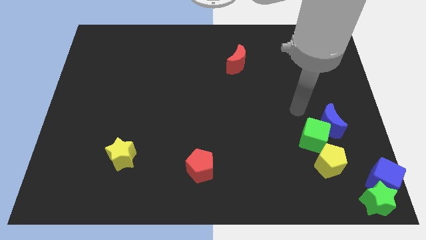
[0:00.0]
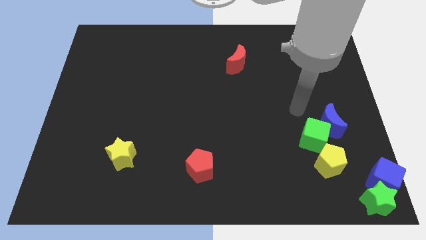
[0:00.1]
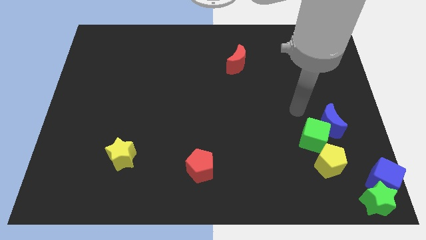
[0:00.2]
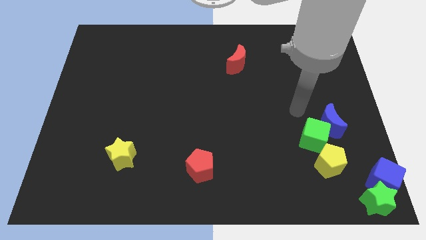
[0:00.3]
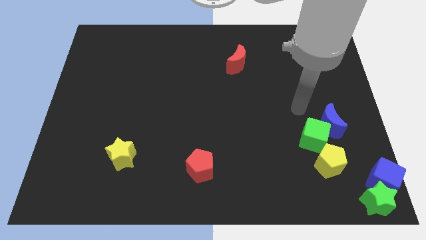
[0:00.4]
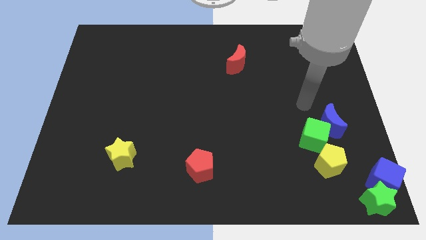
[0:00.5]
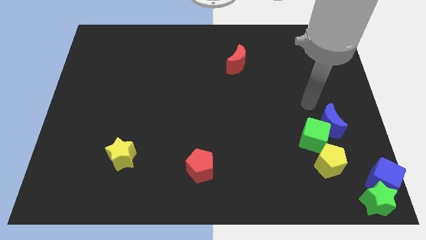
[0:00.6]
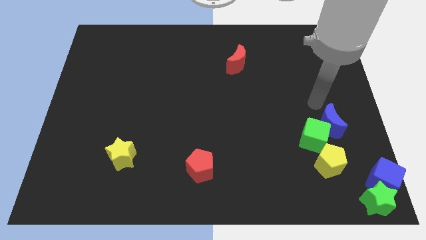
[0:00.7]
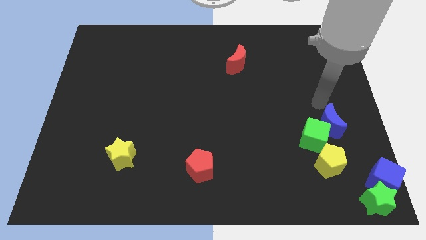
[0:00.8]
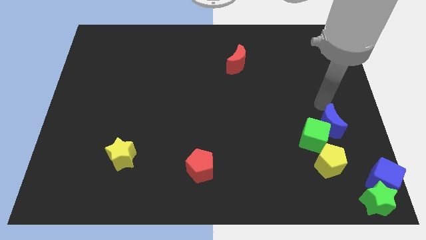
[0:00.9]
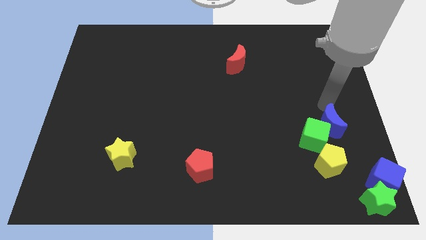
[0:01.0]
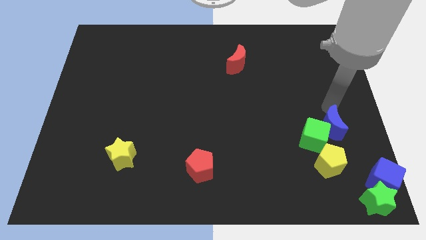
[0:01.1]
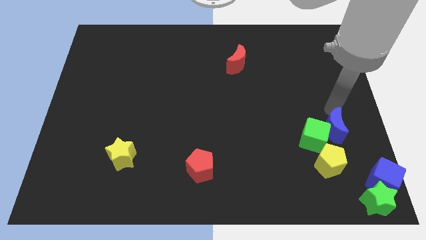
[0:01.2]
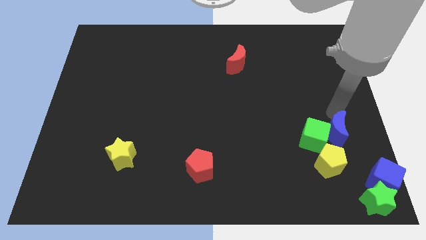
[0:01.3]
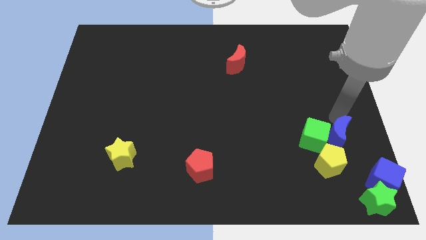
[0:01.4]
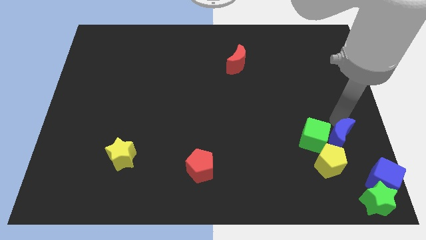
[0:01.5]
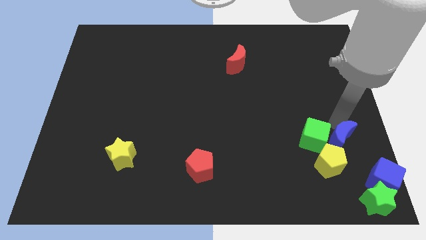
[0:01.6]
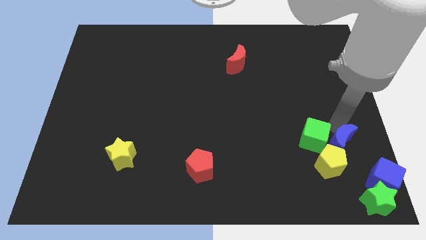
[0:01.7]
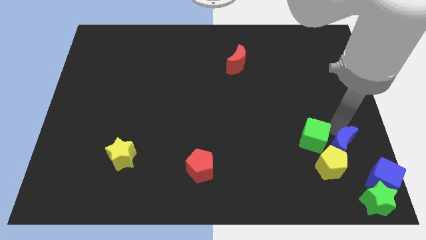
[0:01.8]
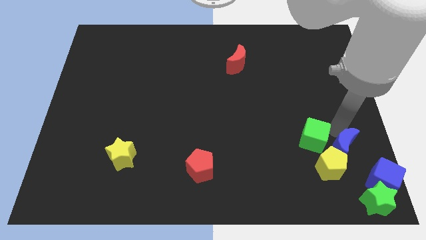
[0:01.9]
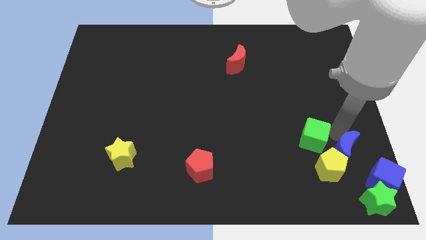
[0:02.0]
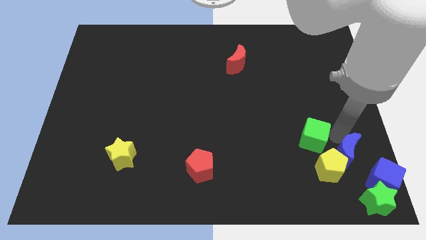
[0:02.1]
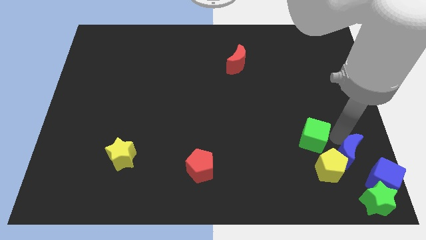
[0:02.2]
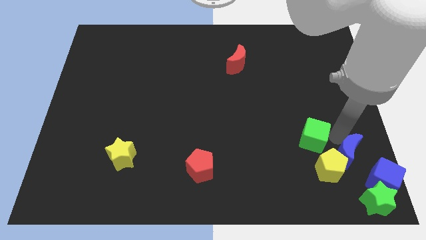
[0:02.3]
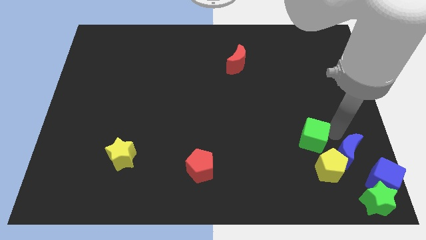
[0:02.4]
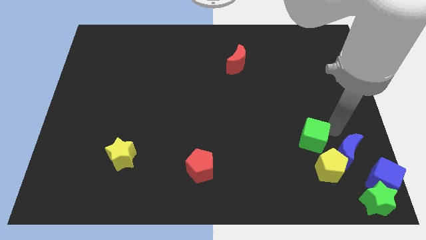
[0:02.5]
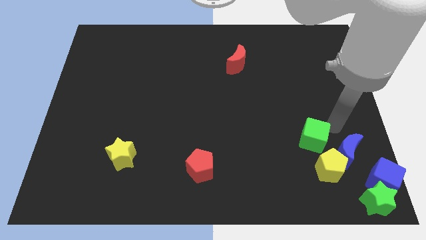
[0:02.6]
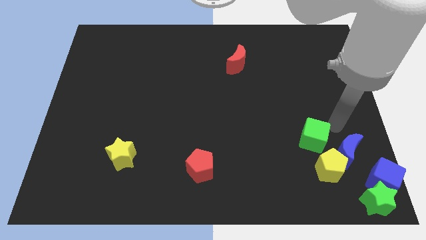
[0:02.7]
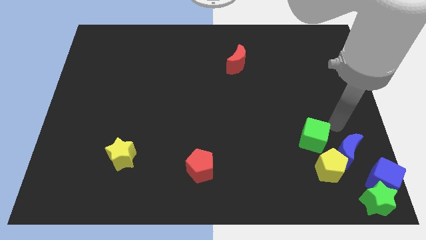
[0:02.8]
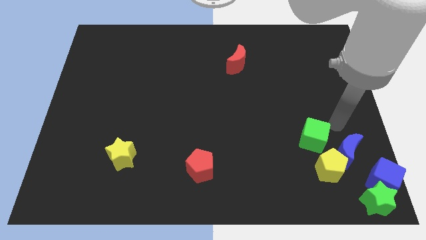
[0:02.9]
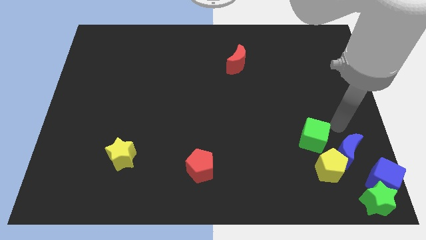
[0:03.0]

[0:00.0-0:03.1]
separate blue moon from green cube

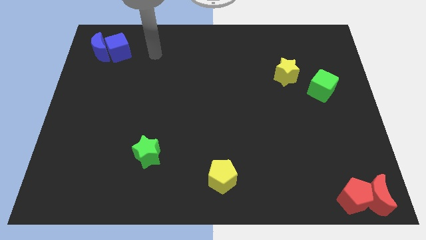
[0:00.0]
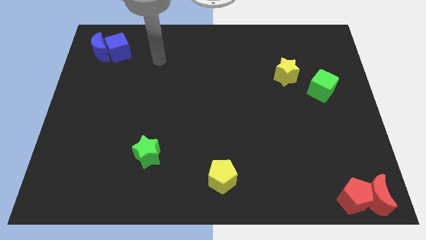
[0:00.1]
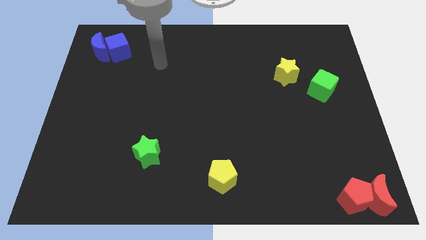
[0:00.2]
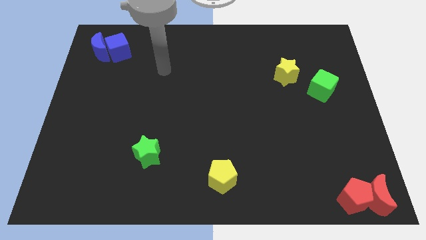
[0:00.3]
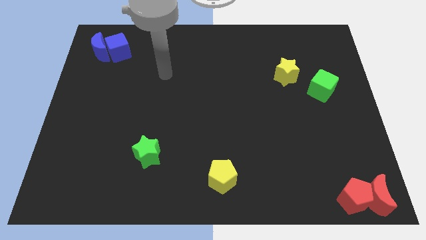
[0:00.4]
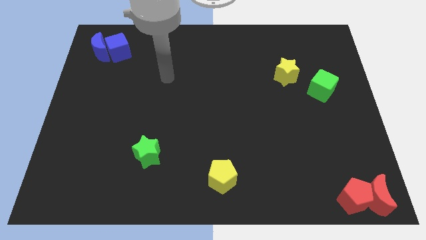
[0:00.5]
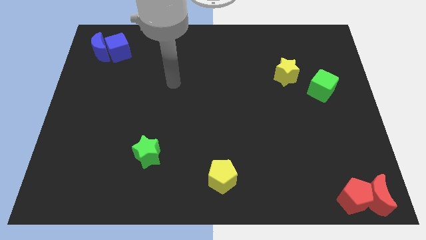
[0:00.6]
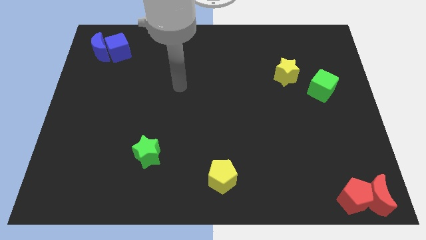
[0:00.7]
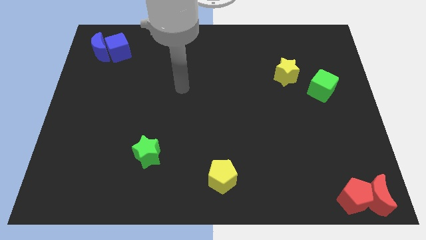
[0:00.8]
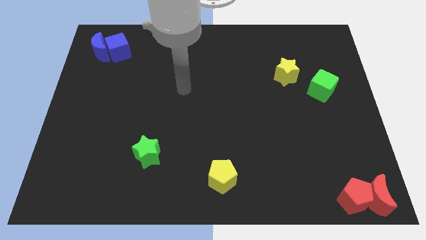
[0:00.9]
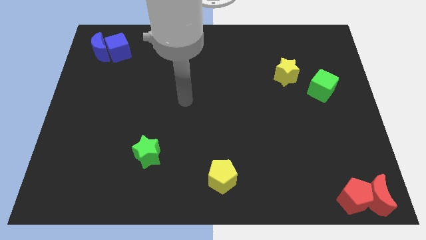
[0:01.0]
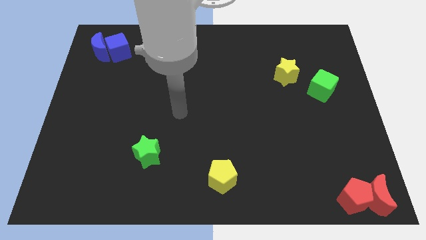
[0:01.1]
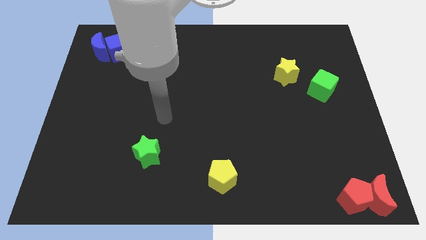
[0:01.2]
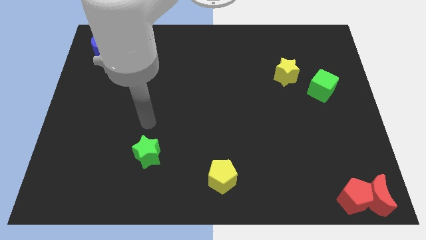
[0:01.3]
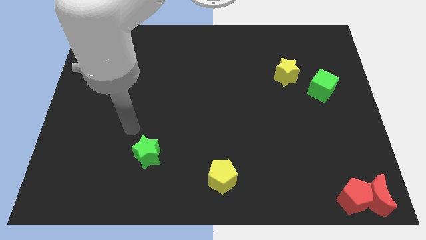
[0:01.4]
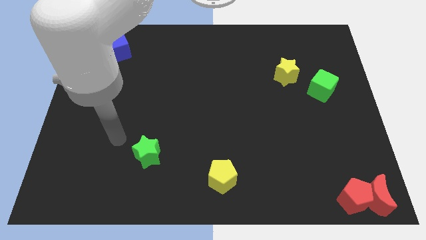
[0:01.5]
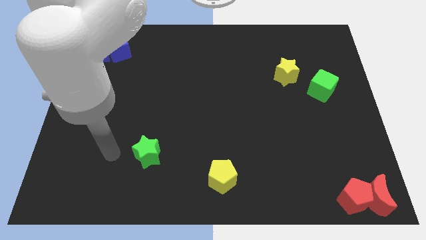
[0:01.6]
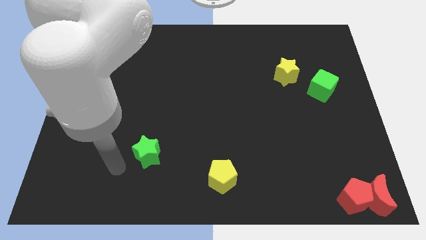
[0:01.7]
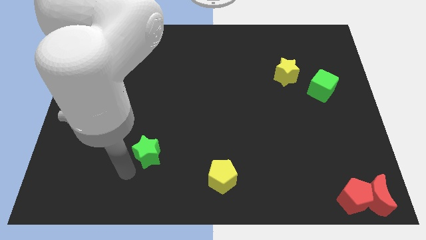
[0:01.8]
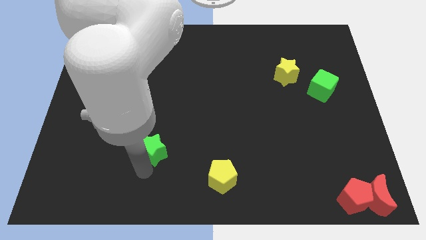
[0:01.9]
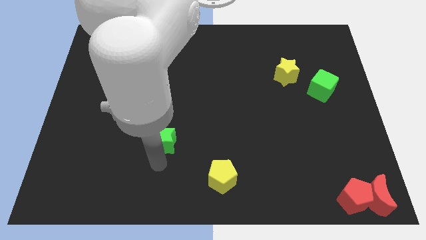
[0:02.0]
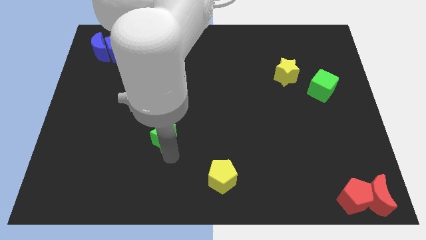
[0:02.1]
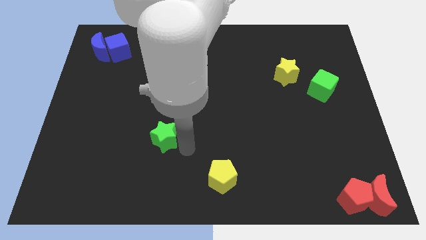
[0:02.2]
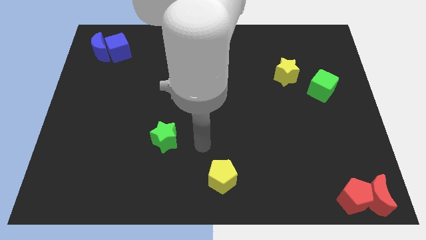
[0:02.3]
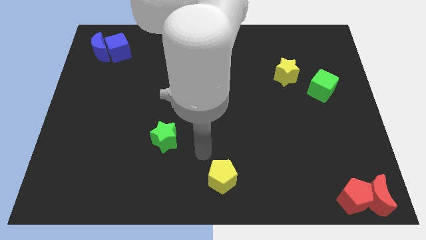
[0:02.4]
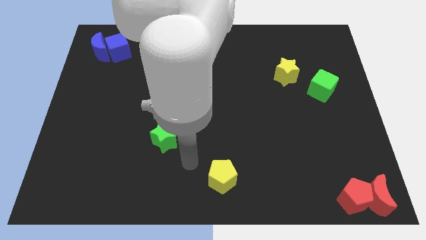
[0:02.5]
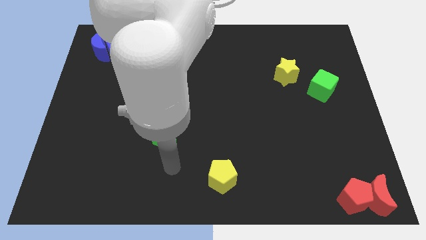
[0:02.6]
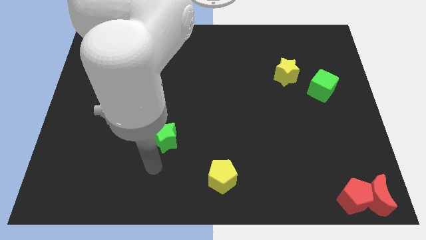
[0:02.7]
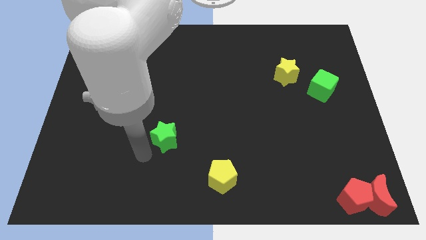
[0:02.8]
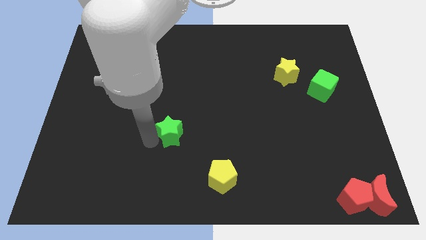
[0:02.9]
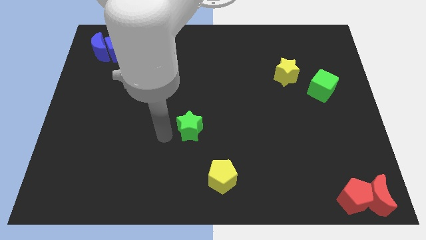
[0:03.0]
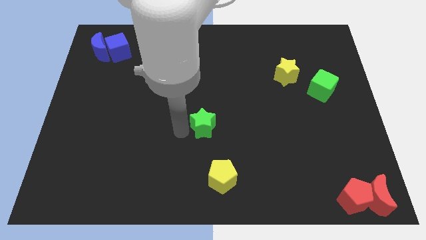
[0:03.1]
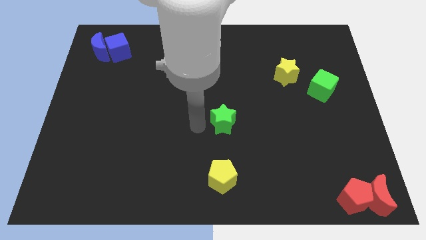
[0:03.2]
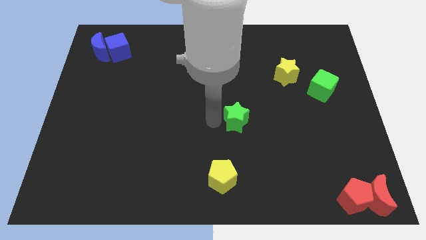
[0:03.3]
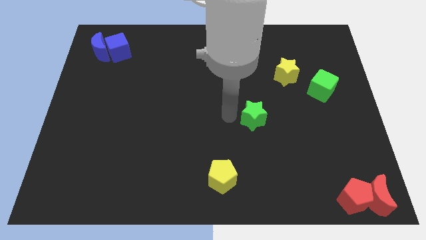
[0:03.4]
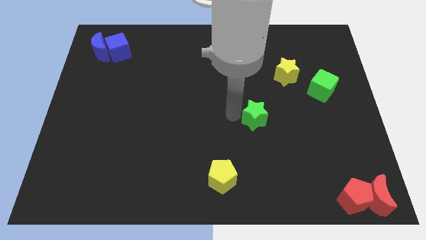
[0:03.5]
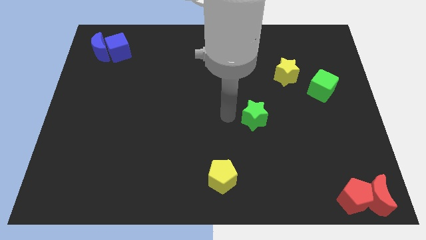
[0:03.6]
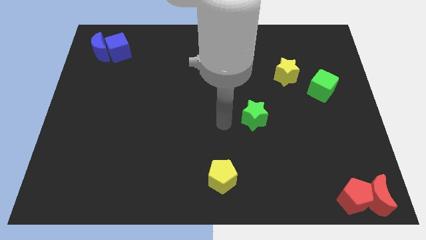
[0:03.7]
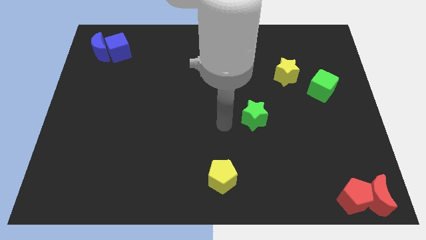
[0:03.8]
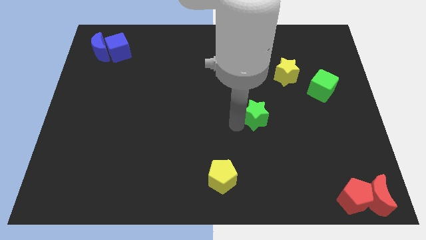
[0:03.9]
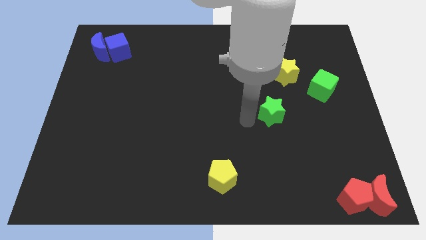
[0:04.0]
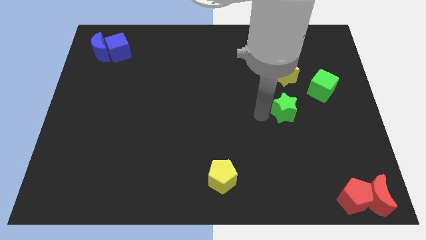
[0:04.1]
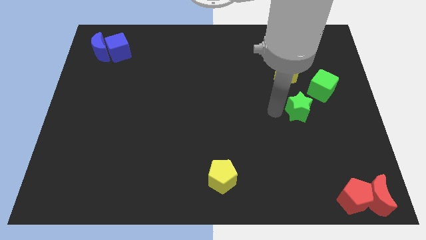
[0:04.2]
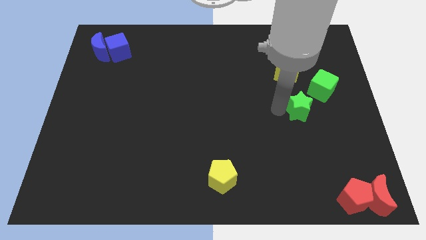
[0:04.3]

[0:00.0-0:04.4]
push the green star to the right of the board

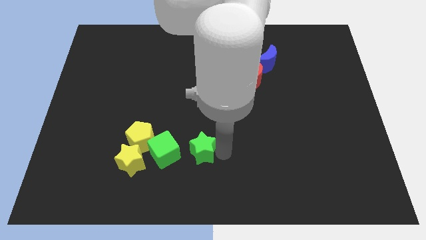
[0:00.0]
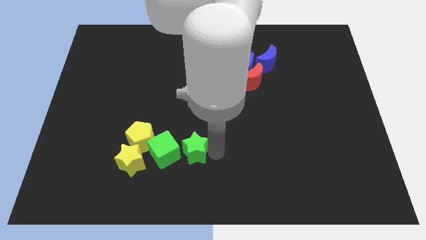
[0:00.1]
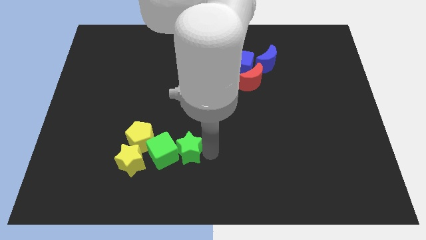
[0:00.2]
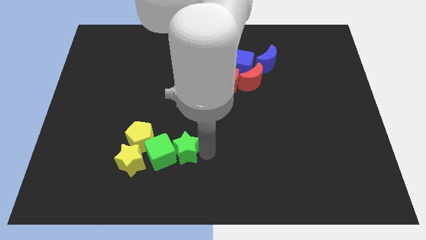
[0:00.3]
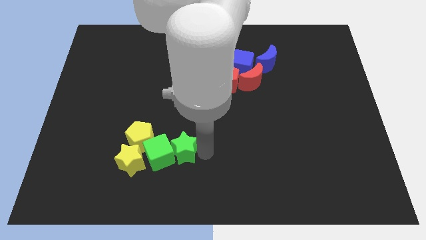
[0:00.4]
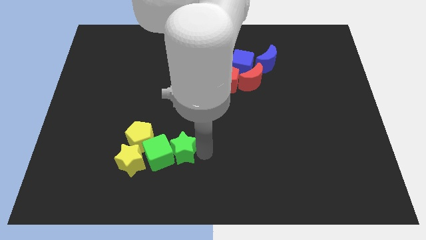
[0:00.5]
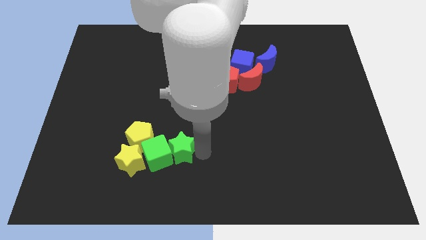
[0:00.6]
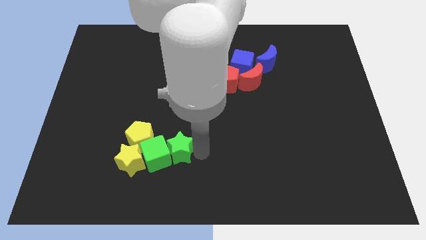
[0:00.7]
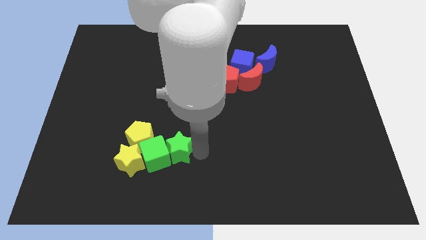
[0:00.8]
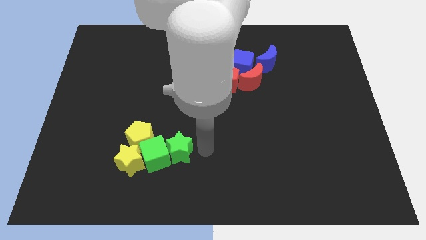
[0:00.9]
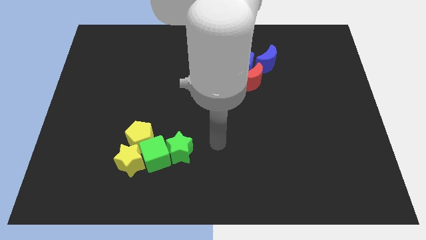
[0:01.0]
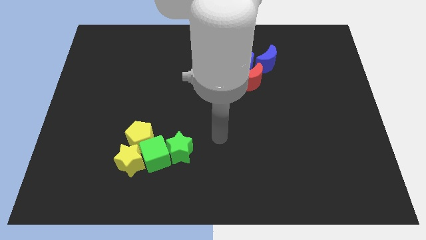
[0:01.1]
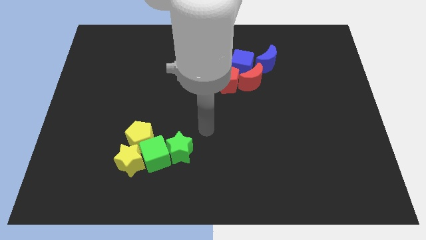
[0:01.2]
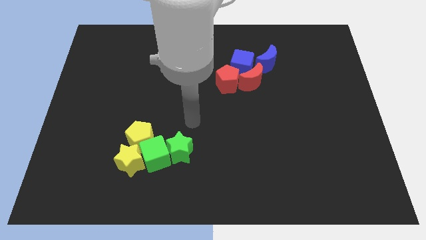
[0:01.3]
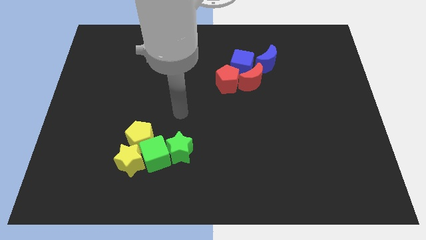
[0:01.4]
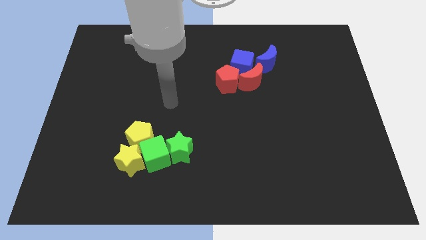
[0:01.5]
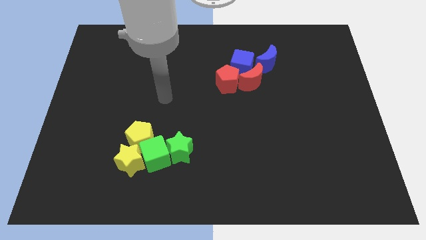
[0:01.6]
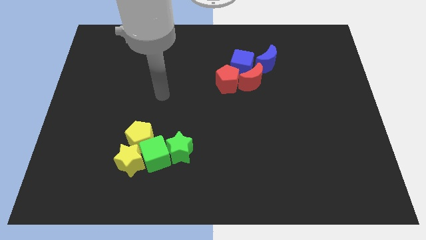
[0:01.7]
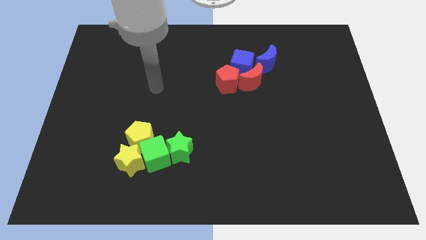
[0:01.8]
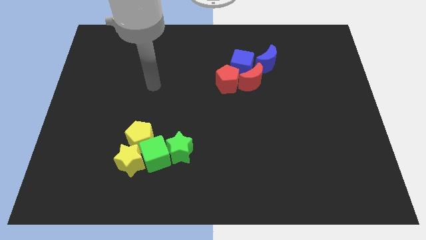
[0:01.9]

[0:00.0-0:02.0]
move green star into green cube
